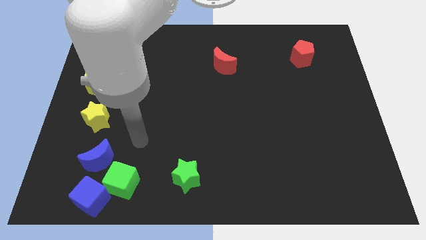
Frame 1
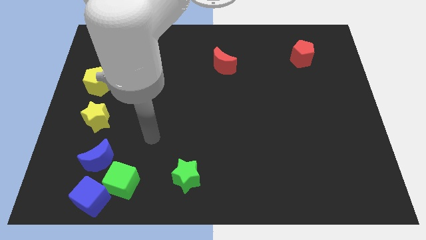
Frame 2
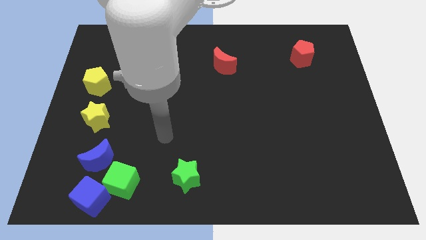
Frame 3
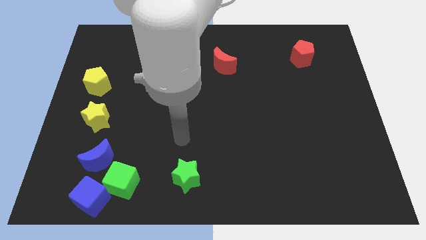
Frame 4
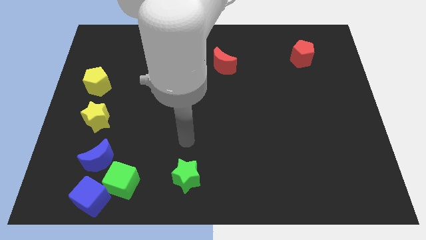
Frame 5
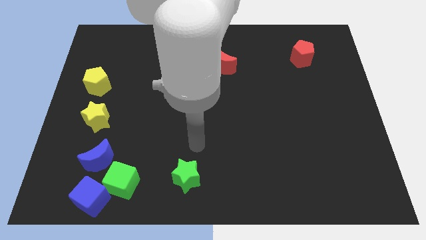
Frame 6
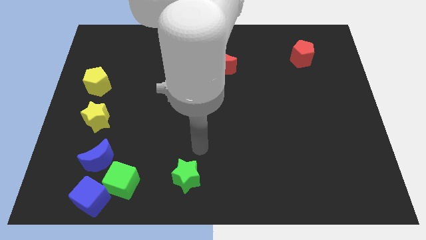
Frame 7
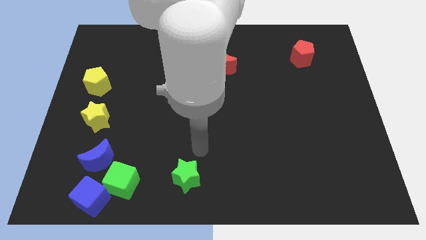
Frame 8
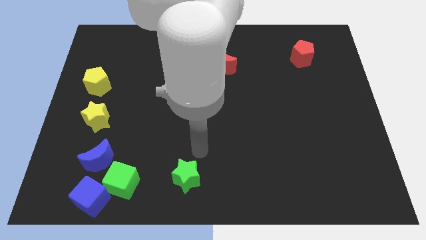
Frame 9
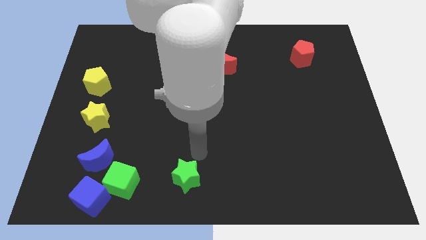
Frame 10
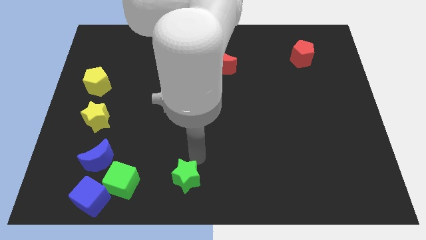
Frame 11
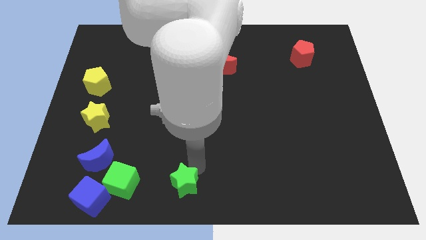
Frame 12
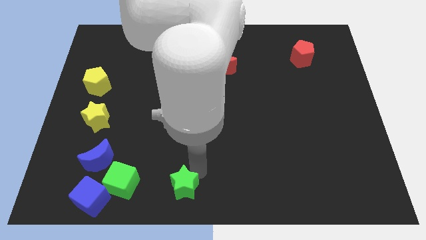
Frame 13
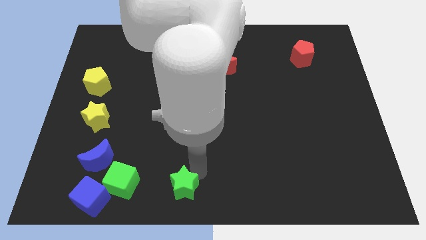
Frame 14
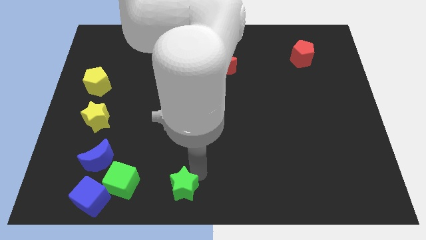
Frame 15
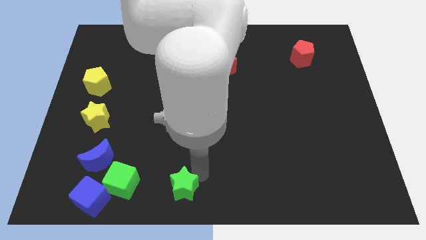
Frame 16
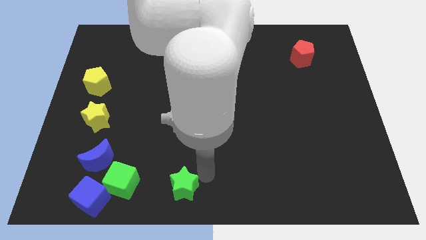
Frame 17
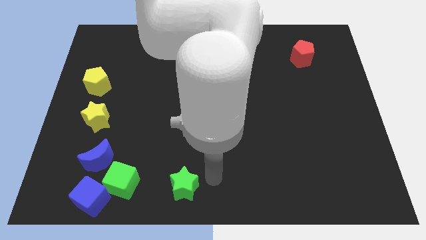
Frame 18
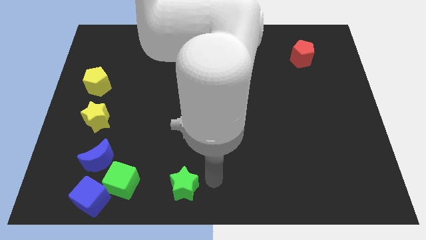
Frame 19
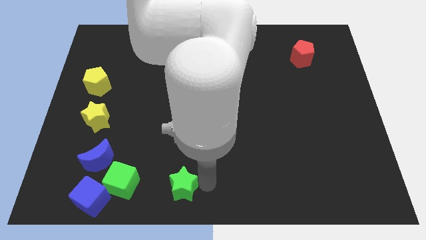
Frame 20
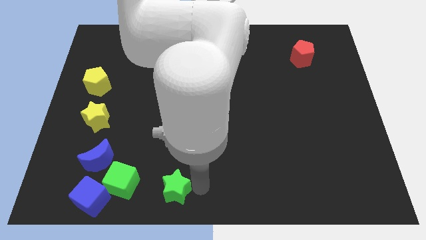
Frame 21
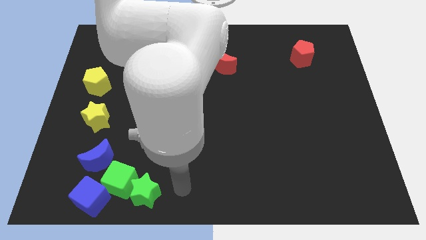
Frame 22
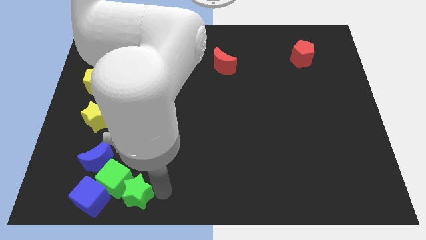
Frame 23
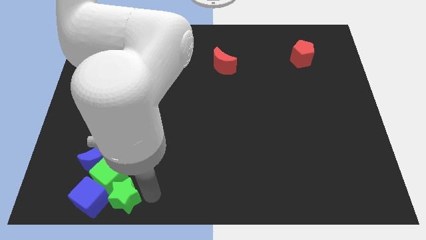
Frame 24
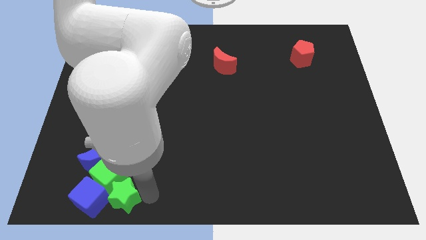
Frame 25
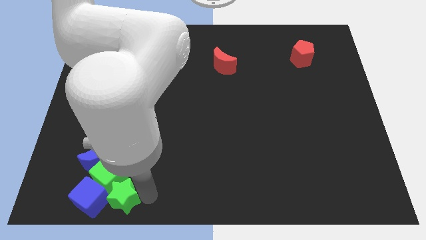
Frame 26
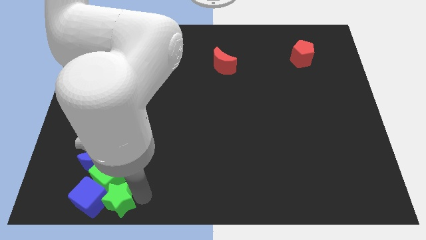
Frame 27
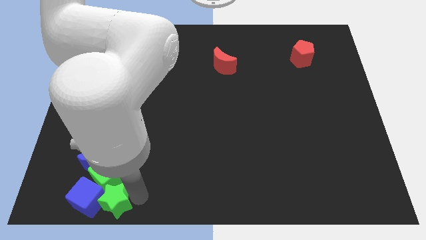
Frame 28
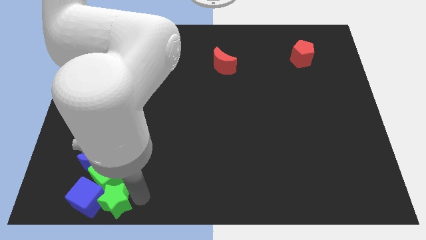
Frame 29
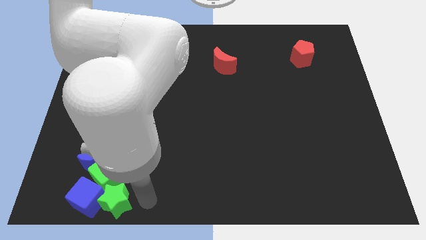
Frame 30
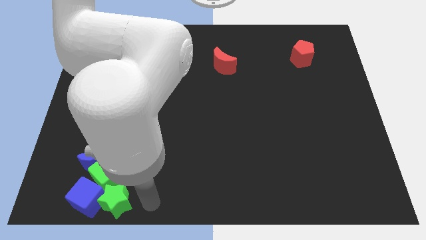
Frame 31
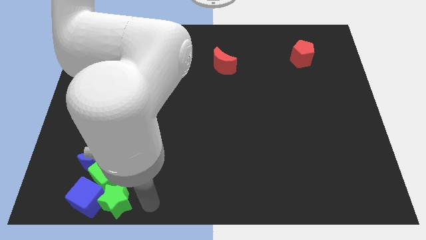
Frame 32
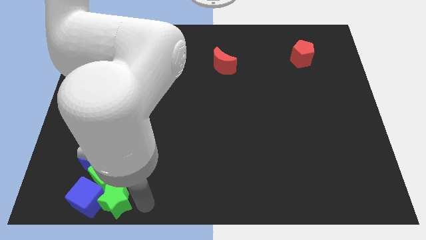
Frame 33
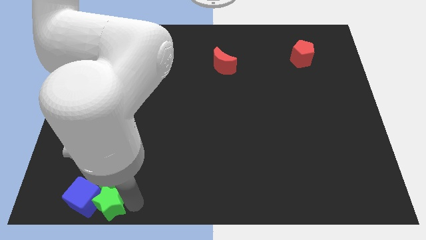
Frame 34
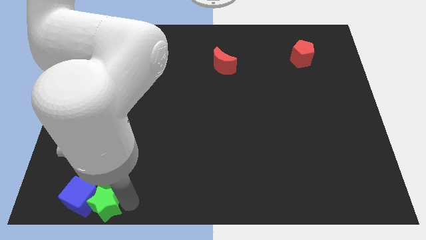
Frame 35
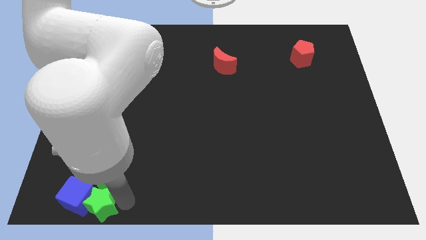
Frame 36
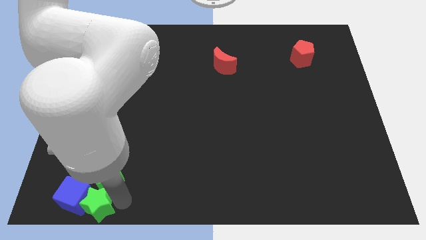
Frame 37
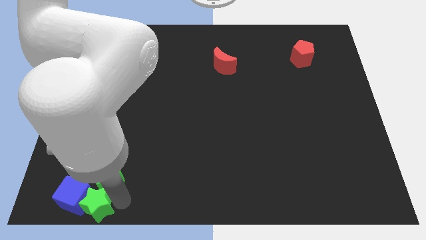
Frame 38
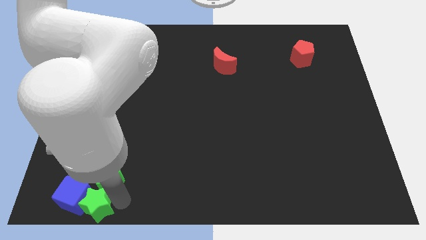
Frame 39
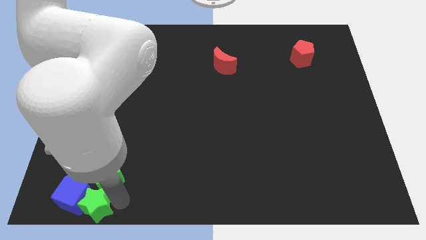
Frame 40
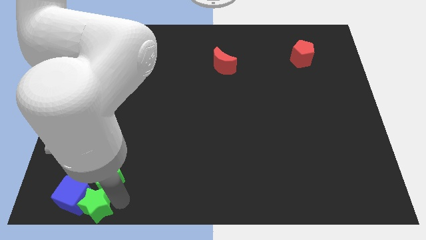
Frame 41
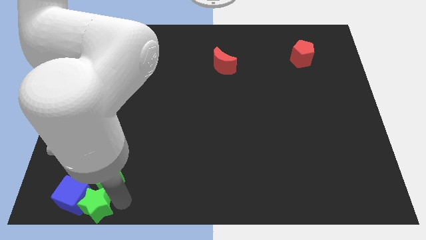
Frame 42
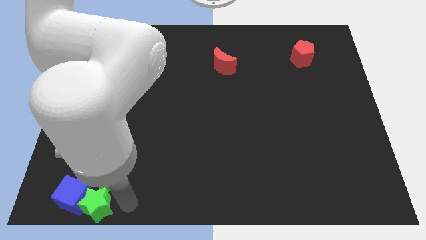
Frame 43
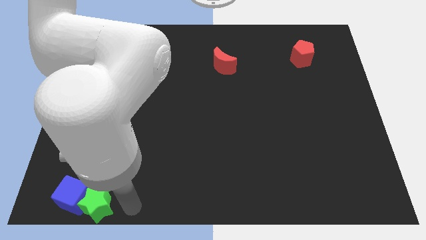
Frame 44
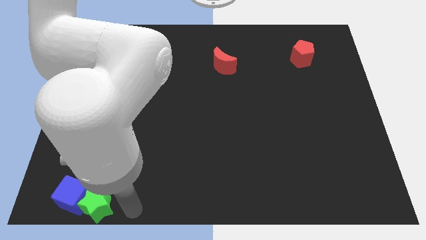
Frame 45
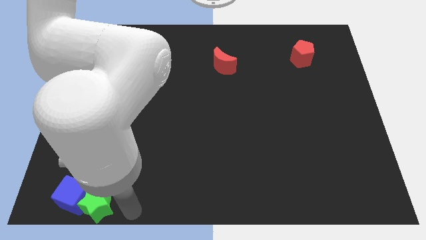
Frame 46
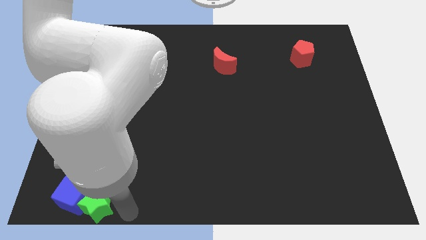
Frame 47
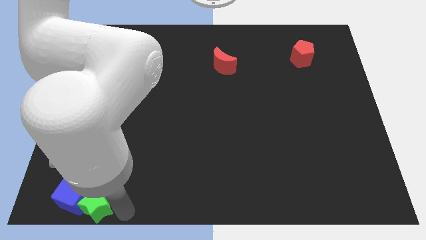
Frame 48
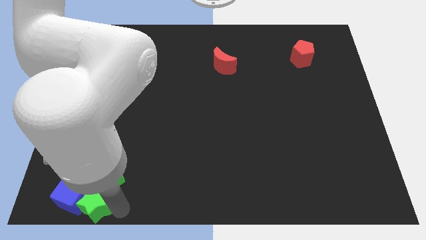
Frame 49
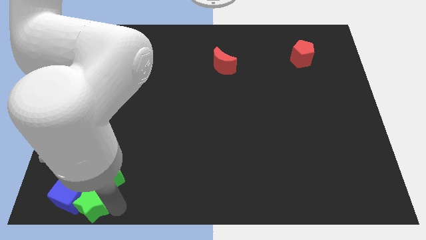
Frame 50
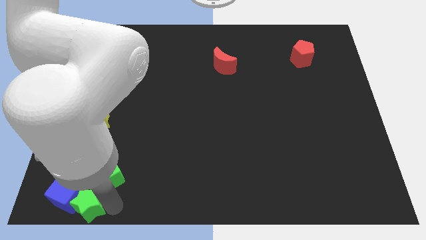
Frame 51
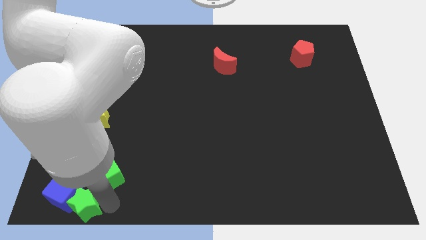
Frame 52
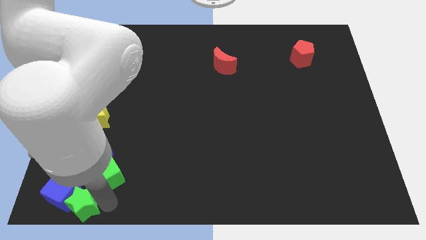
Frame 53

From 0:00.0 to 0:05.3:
push the green star into the blue cube

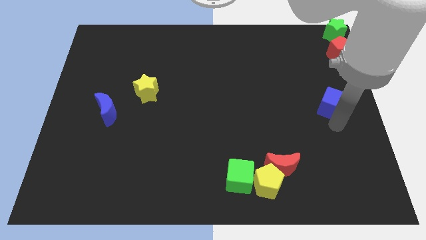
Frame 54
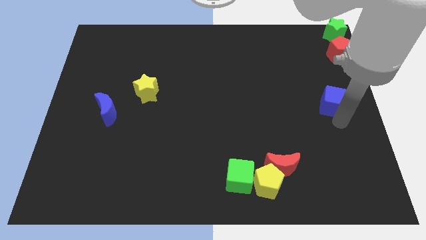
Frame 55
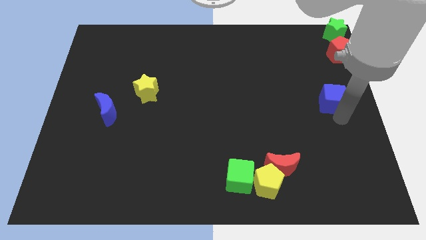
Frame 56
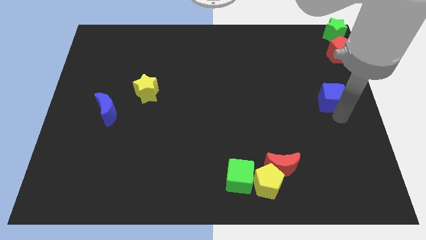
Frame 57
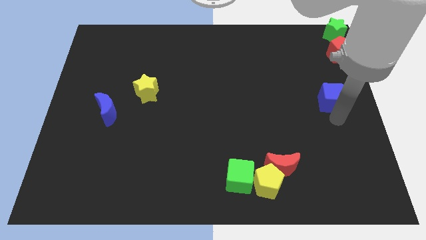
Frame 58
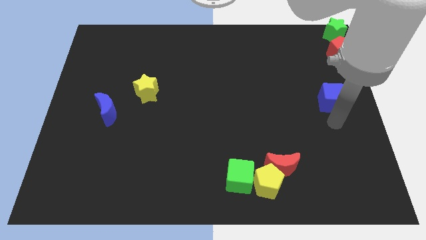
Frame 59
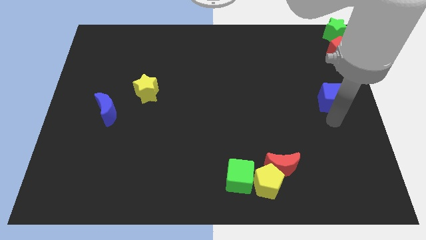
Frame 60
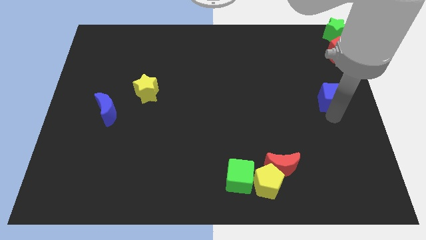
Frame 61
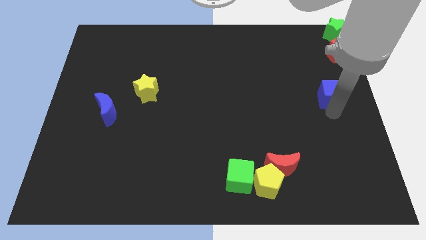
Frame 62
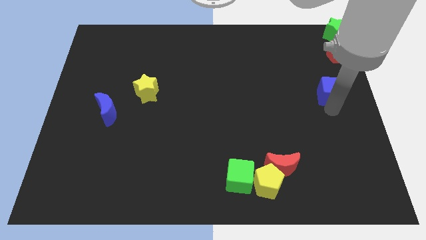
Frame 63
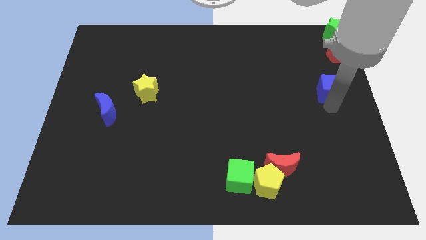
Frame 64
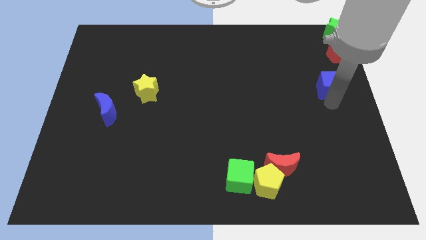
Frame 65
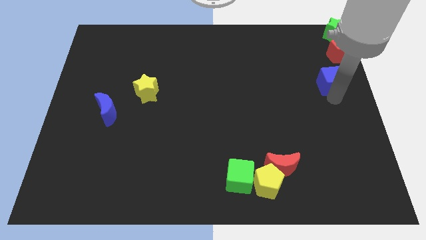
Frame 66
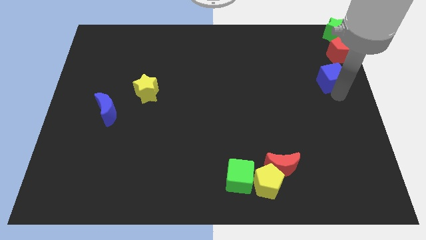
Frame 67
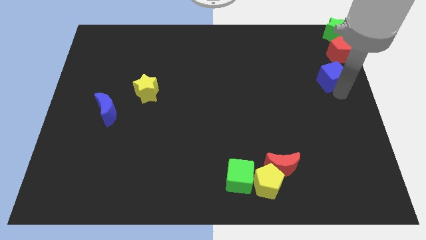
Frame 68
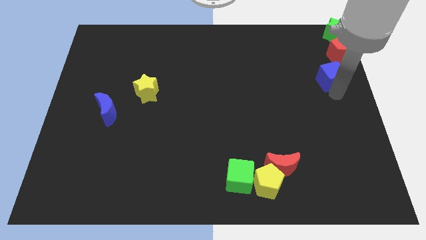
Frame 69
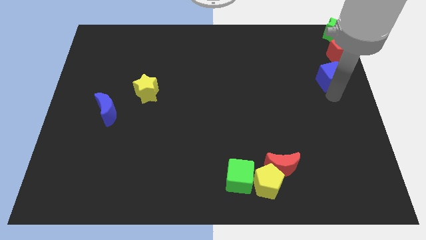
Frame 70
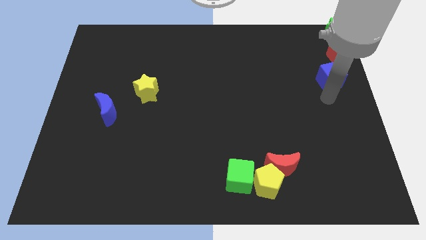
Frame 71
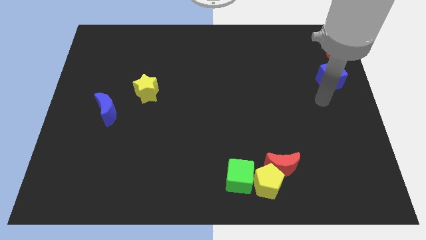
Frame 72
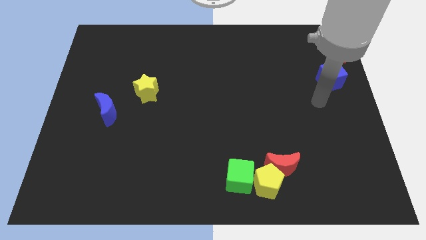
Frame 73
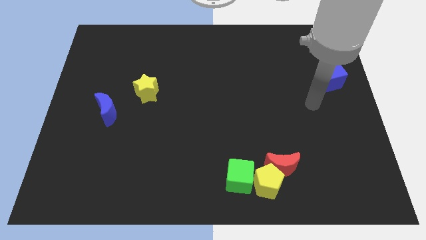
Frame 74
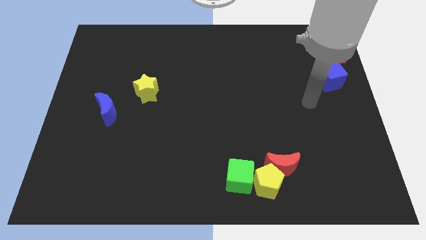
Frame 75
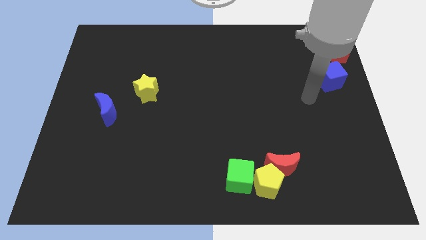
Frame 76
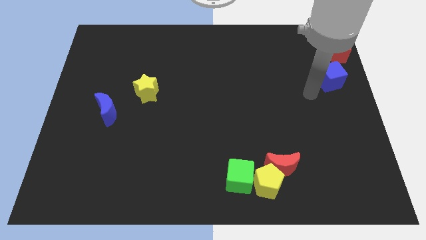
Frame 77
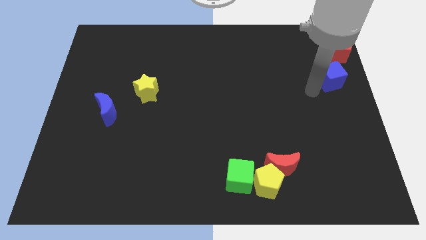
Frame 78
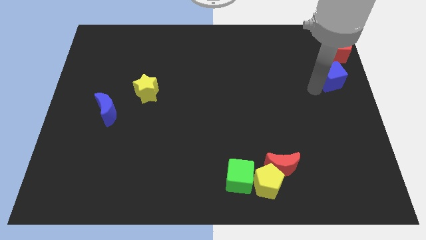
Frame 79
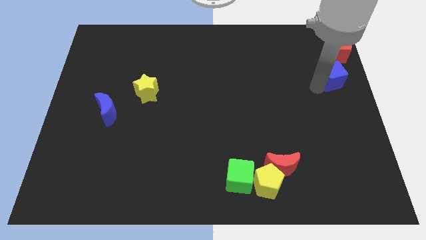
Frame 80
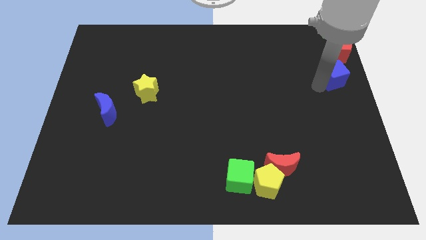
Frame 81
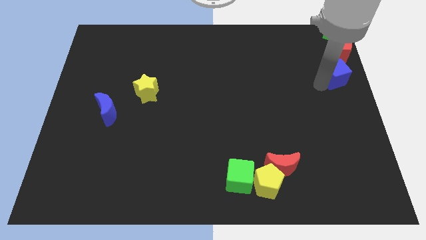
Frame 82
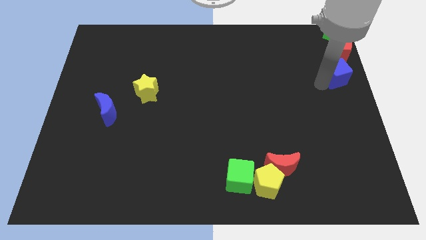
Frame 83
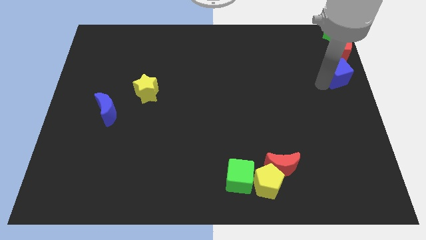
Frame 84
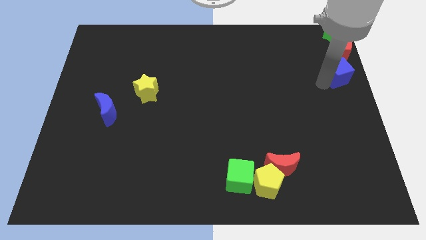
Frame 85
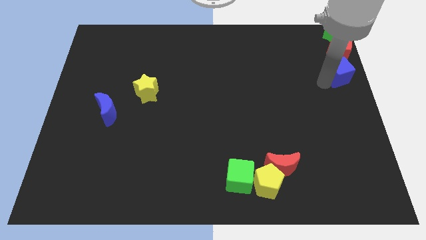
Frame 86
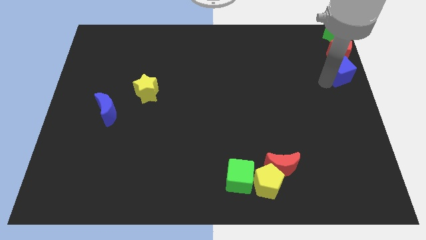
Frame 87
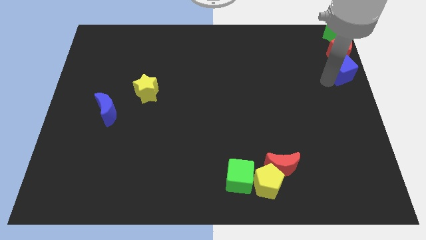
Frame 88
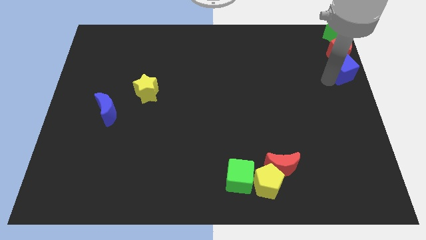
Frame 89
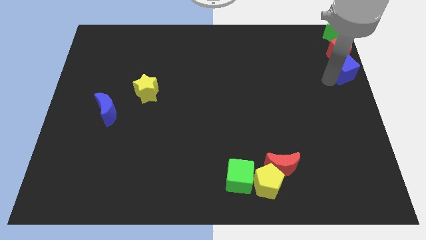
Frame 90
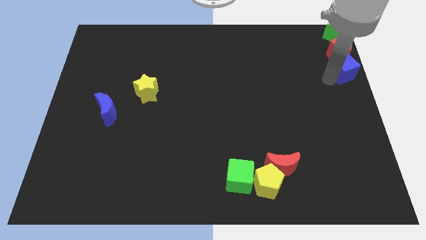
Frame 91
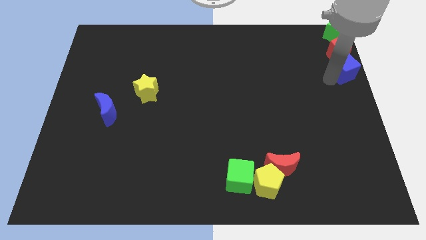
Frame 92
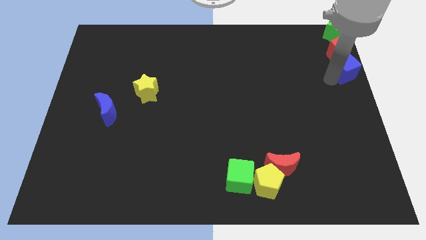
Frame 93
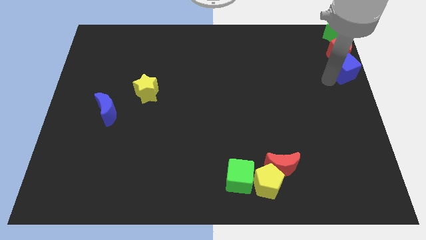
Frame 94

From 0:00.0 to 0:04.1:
place the blue cube below the red pentagon to form a vertical line
